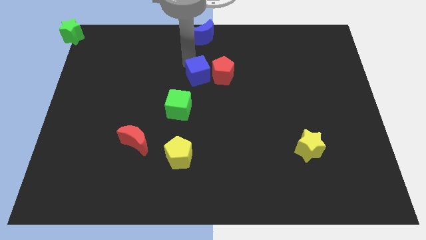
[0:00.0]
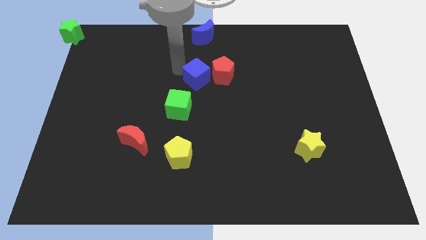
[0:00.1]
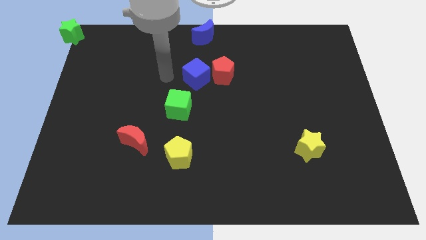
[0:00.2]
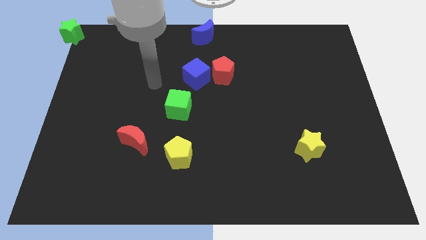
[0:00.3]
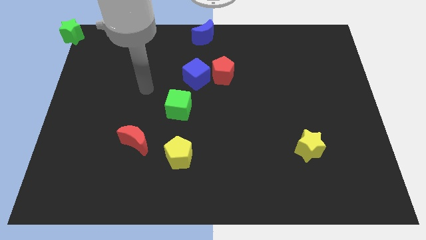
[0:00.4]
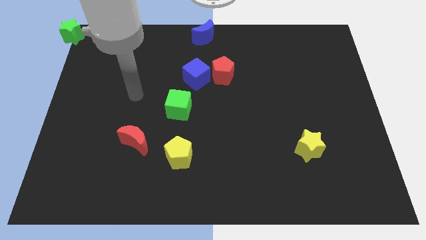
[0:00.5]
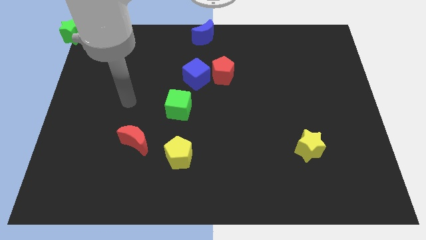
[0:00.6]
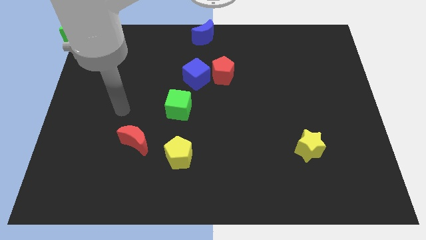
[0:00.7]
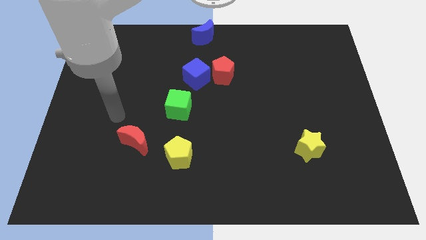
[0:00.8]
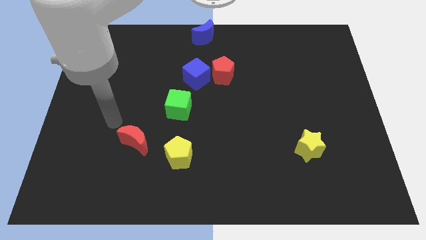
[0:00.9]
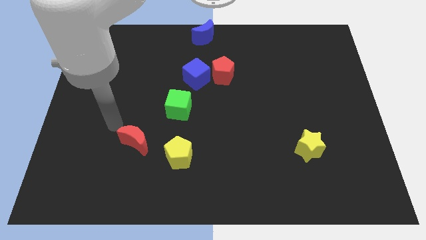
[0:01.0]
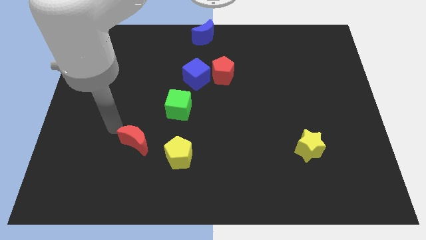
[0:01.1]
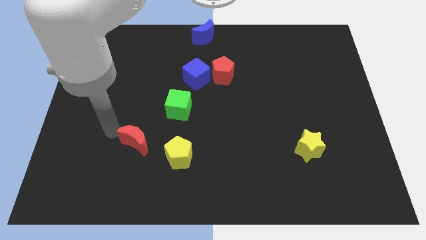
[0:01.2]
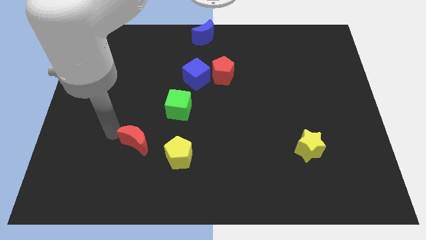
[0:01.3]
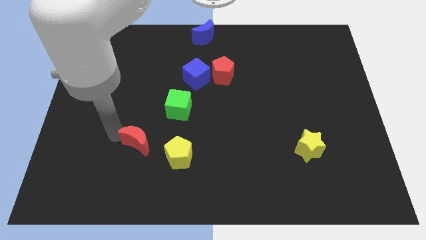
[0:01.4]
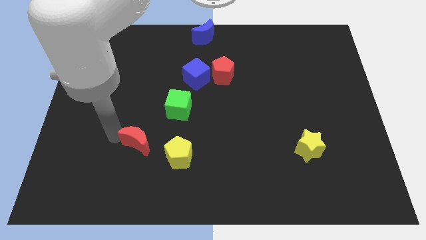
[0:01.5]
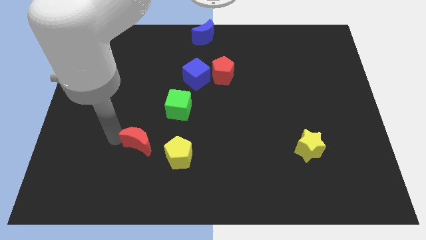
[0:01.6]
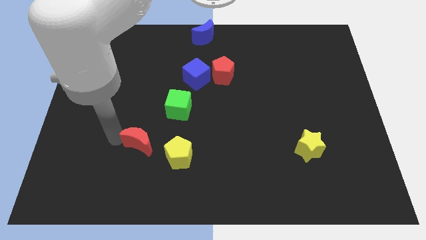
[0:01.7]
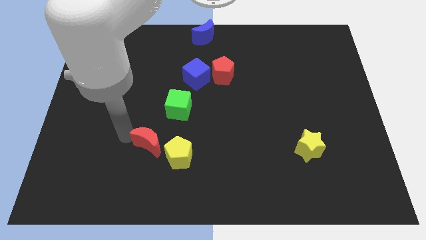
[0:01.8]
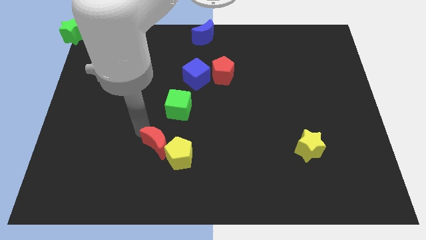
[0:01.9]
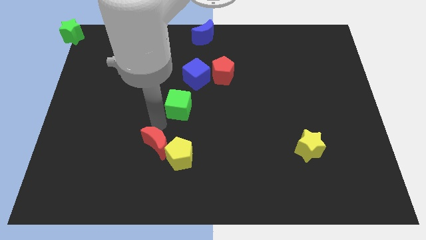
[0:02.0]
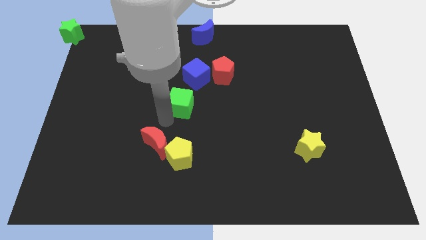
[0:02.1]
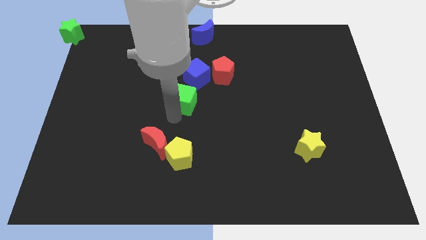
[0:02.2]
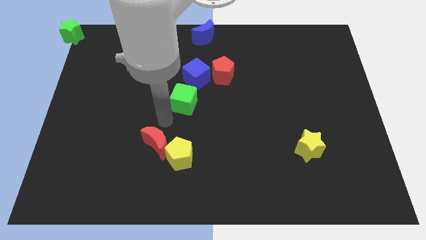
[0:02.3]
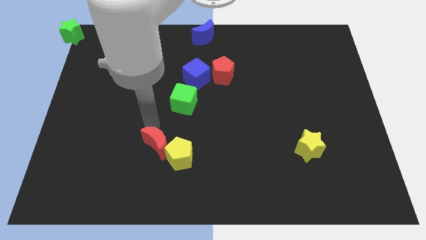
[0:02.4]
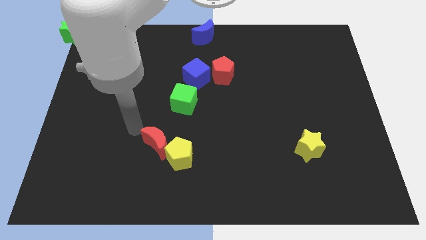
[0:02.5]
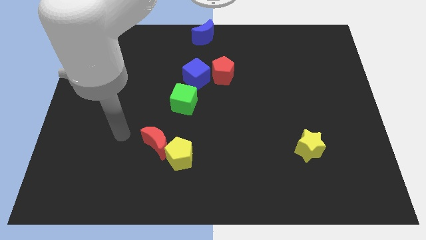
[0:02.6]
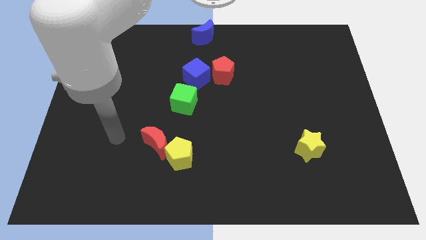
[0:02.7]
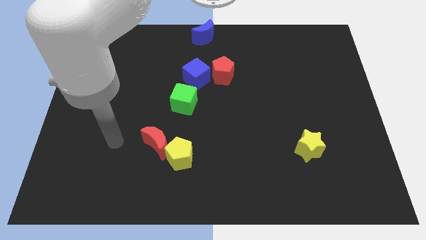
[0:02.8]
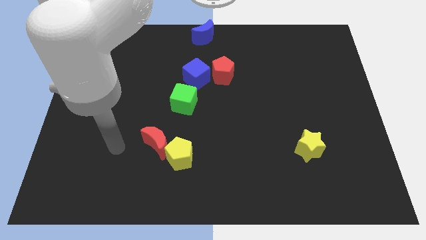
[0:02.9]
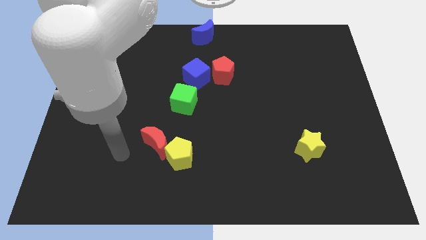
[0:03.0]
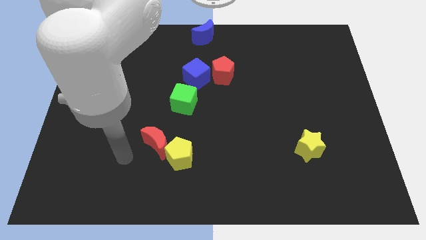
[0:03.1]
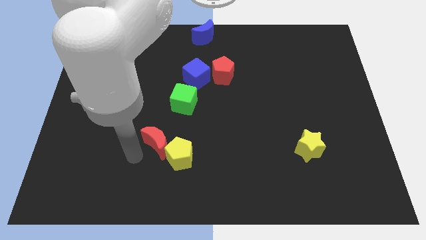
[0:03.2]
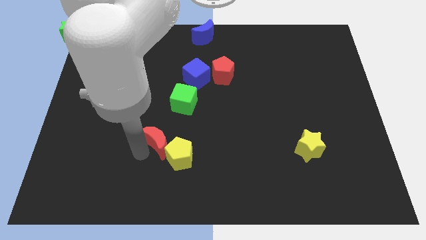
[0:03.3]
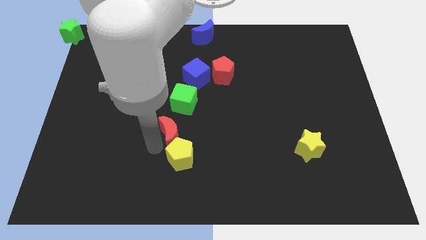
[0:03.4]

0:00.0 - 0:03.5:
move your arm from blue cube to the red moon

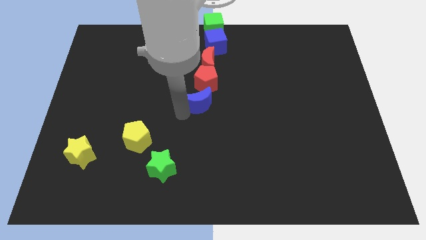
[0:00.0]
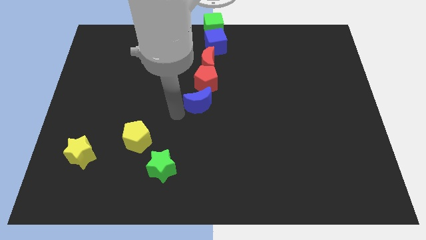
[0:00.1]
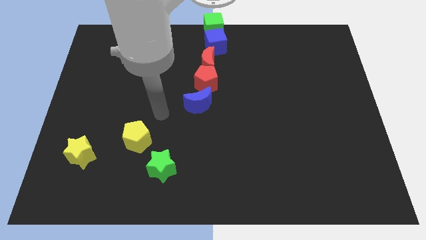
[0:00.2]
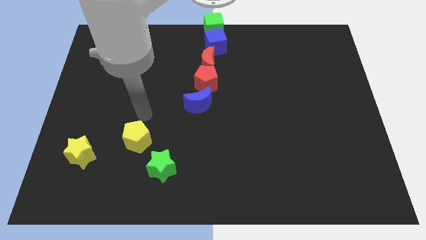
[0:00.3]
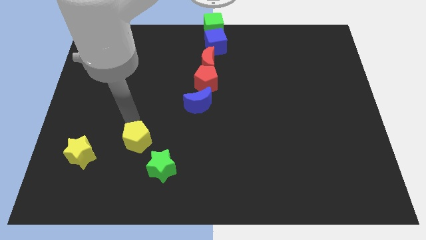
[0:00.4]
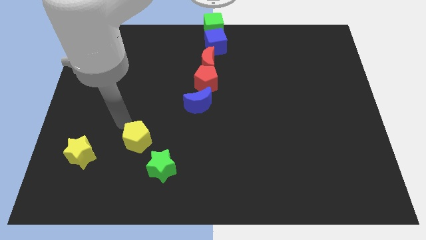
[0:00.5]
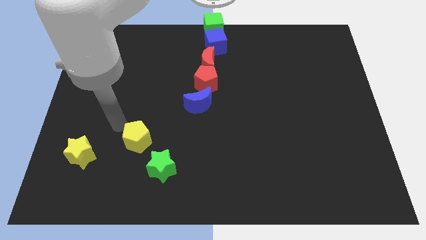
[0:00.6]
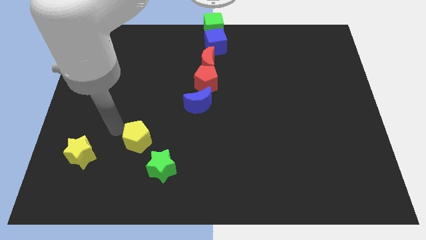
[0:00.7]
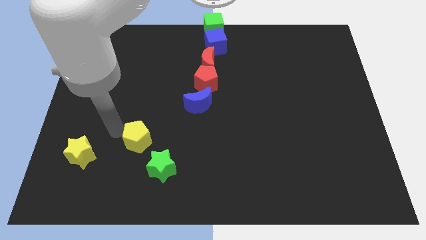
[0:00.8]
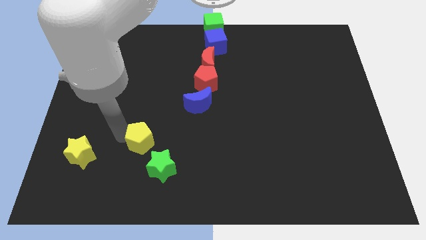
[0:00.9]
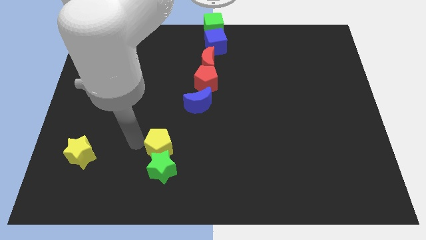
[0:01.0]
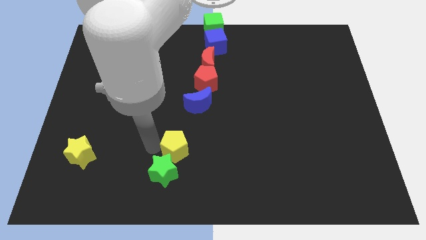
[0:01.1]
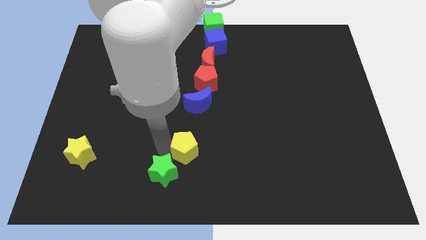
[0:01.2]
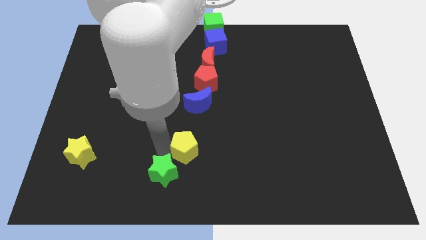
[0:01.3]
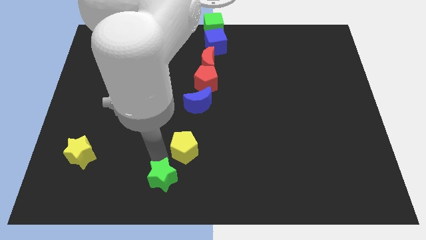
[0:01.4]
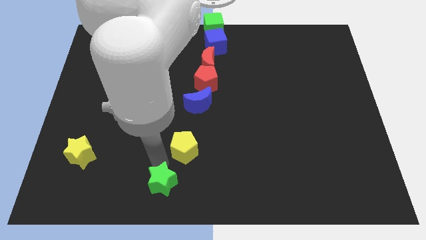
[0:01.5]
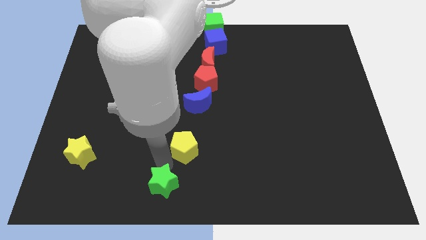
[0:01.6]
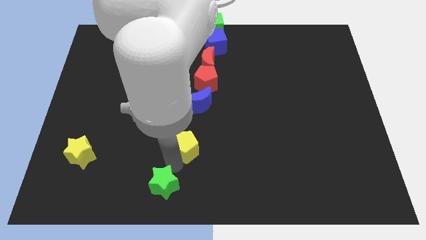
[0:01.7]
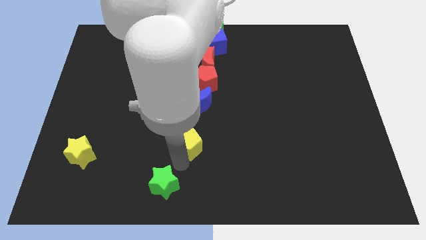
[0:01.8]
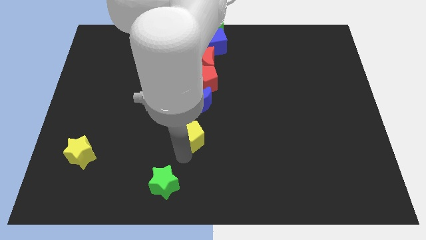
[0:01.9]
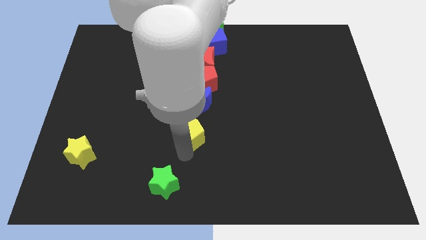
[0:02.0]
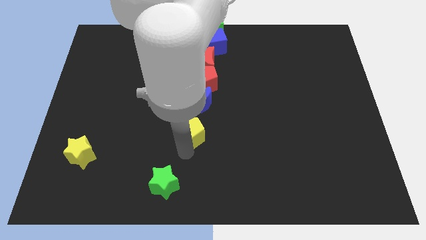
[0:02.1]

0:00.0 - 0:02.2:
place the yellow pentagon below the blue crescent

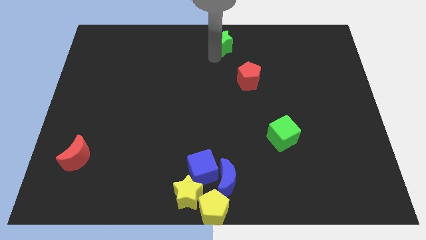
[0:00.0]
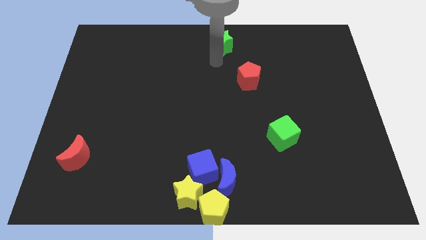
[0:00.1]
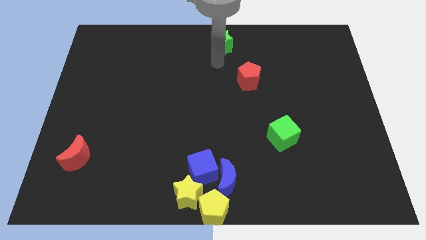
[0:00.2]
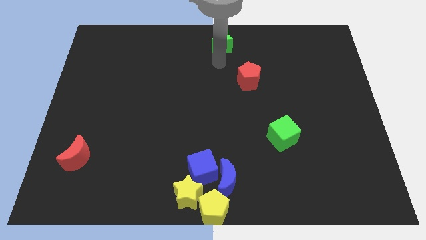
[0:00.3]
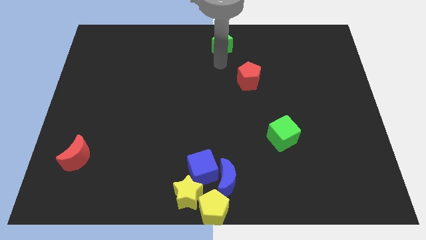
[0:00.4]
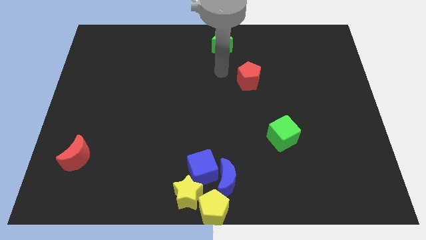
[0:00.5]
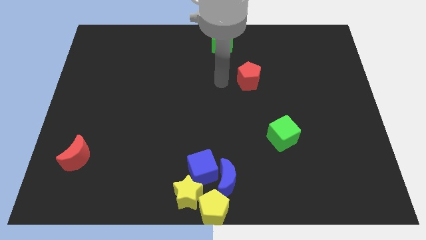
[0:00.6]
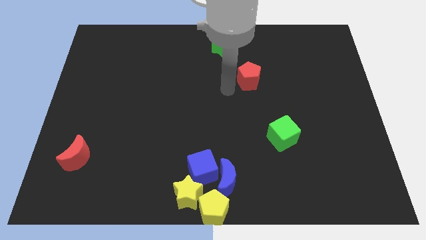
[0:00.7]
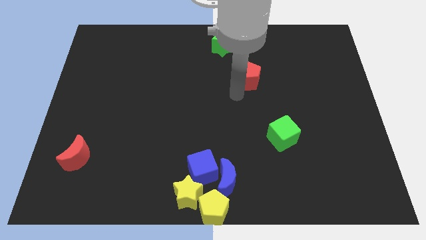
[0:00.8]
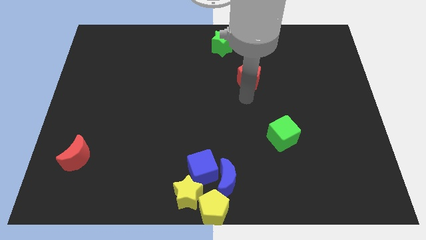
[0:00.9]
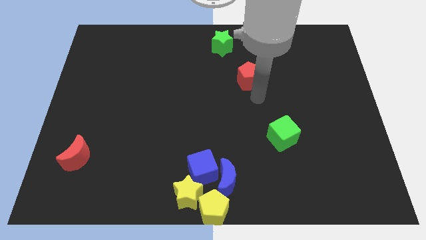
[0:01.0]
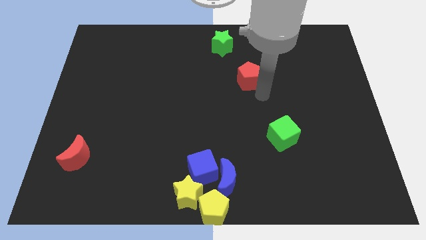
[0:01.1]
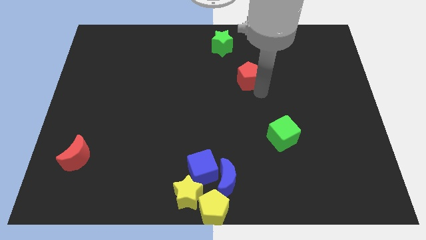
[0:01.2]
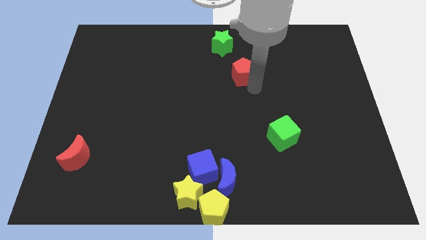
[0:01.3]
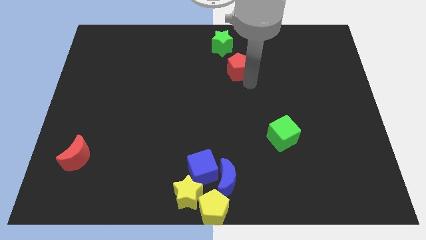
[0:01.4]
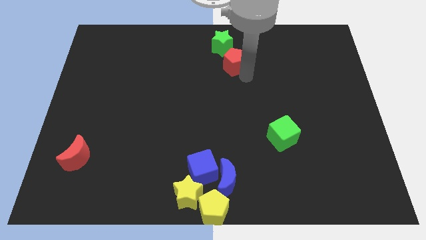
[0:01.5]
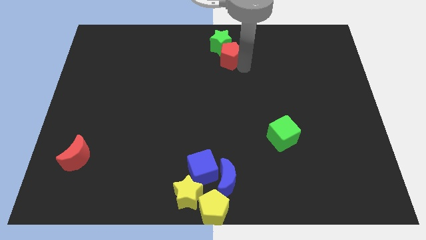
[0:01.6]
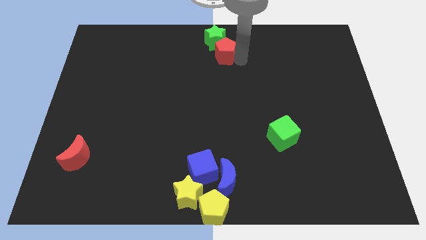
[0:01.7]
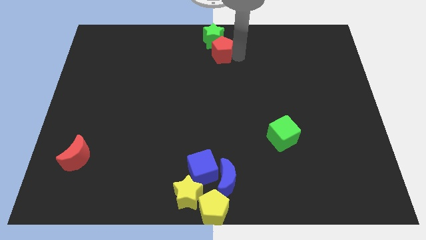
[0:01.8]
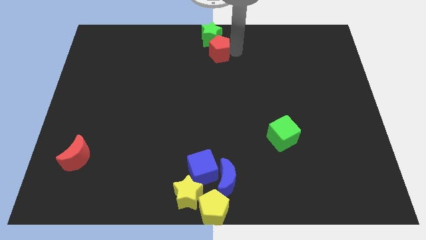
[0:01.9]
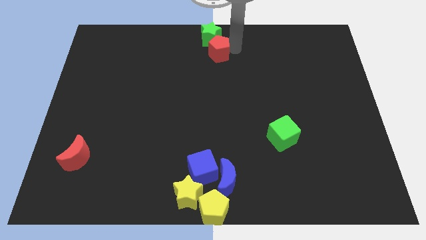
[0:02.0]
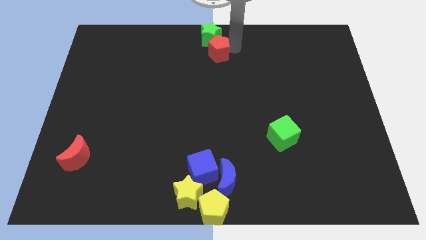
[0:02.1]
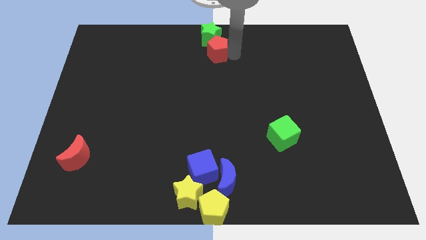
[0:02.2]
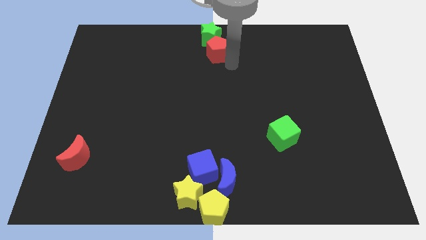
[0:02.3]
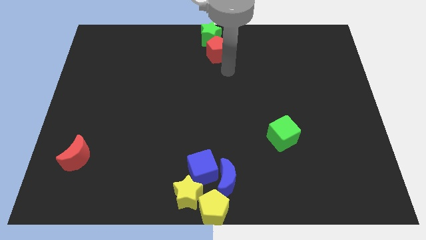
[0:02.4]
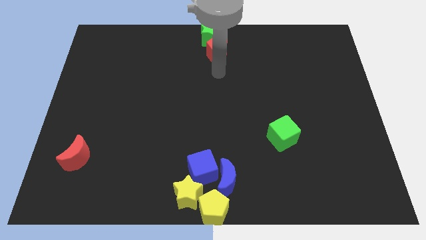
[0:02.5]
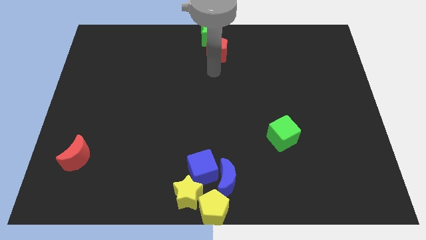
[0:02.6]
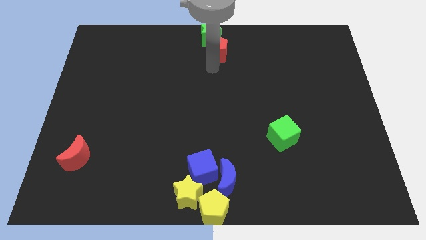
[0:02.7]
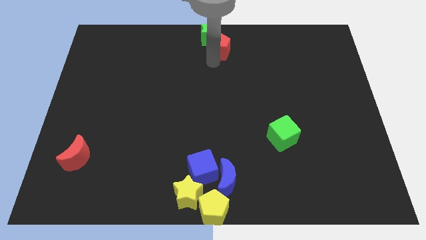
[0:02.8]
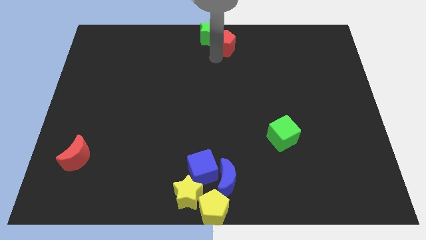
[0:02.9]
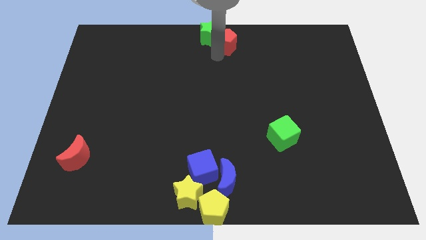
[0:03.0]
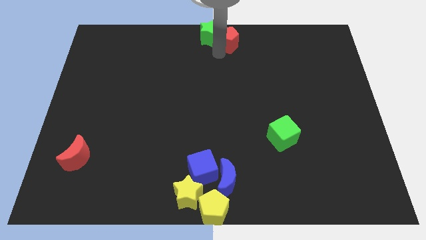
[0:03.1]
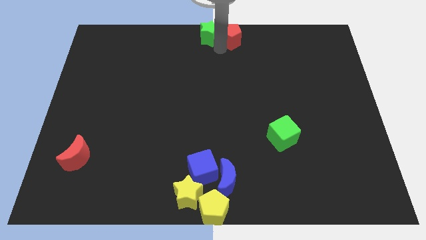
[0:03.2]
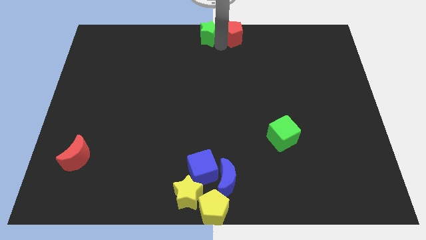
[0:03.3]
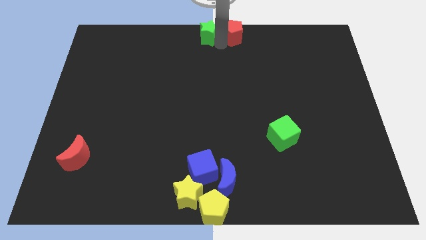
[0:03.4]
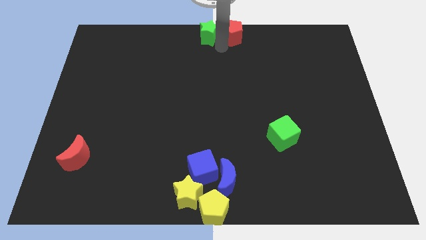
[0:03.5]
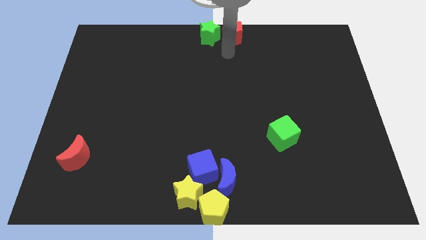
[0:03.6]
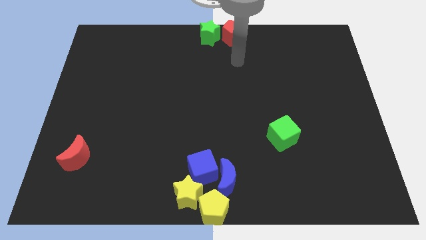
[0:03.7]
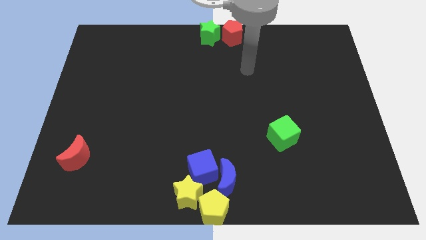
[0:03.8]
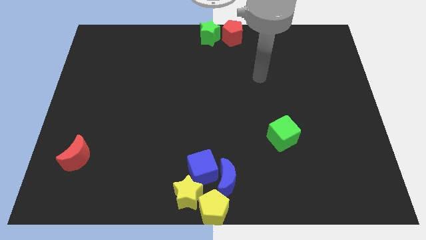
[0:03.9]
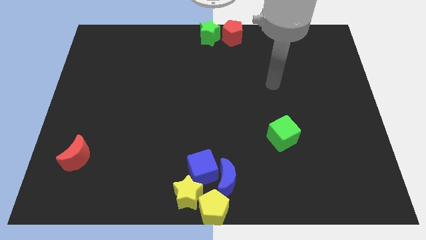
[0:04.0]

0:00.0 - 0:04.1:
put the red pentagon on the right side of the green star
